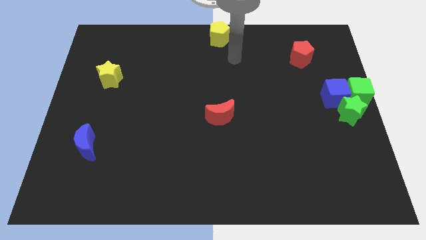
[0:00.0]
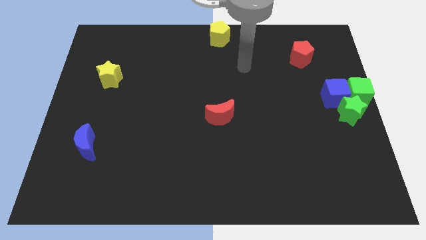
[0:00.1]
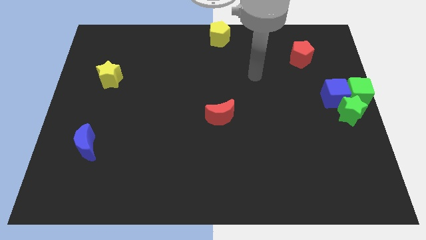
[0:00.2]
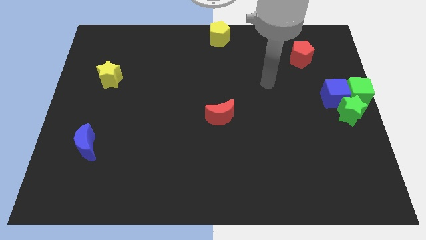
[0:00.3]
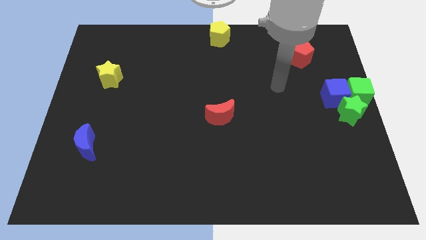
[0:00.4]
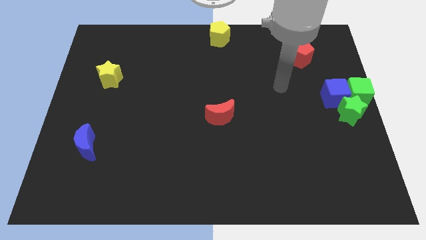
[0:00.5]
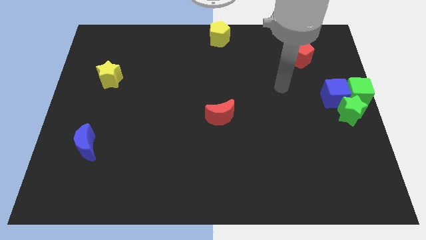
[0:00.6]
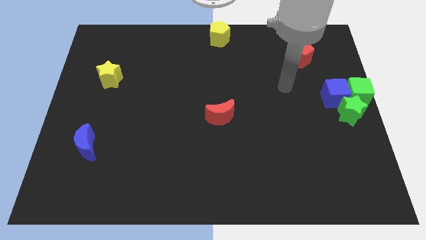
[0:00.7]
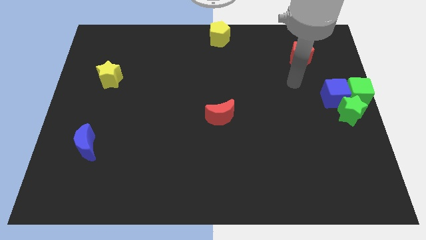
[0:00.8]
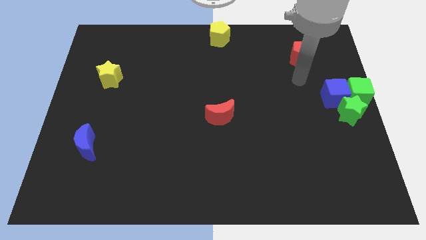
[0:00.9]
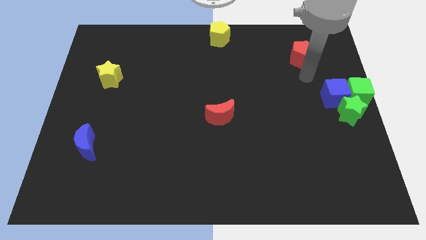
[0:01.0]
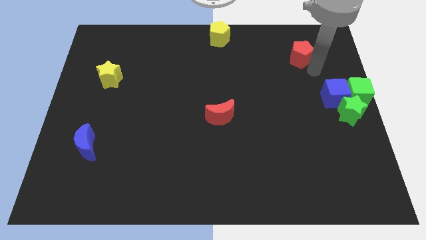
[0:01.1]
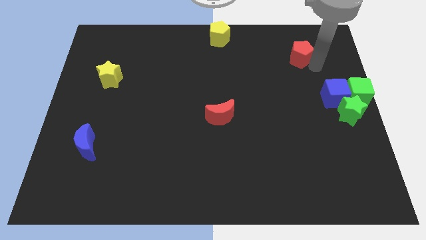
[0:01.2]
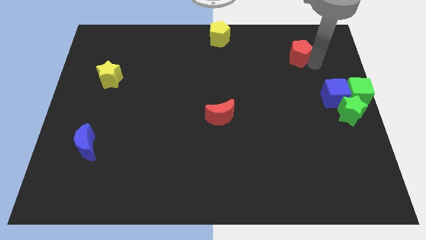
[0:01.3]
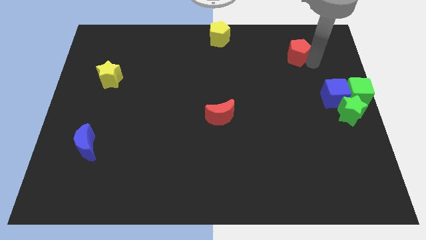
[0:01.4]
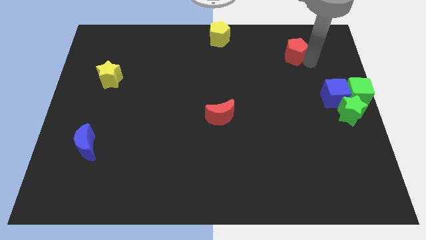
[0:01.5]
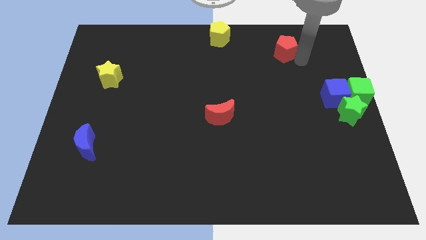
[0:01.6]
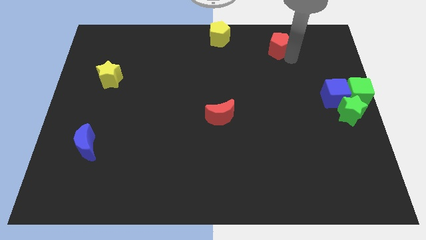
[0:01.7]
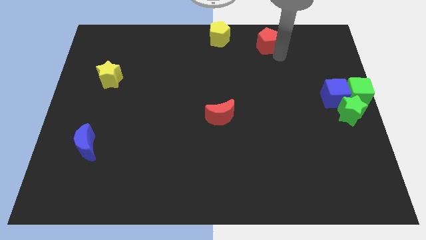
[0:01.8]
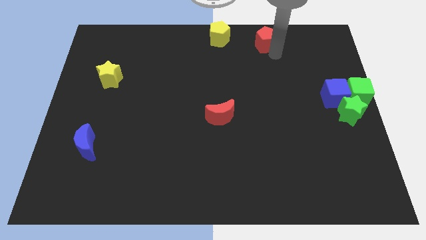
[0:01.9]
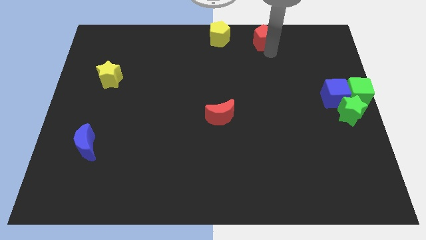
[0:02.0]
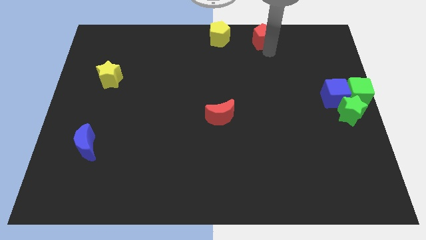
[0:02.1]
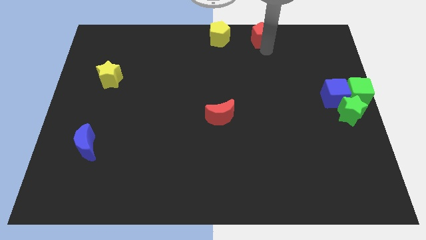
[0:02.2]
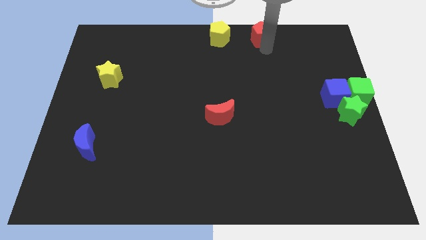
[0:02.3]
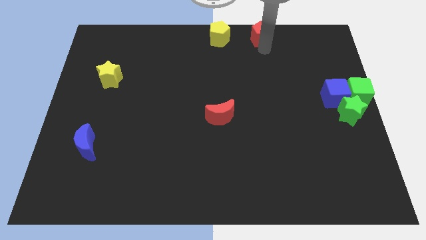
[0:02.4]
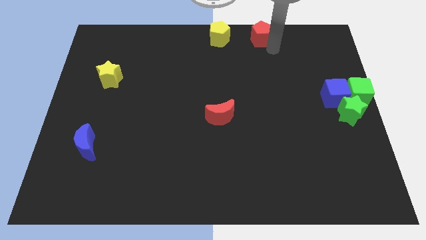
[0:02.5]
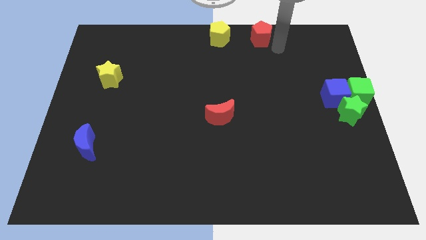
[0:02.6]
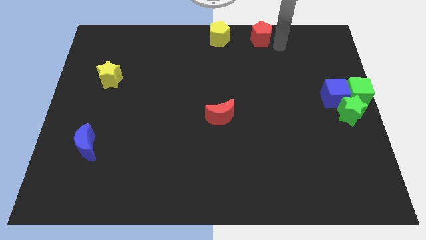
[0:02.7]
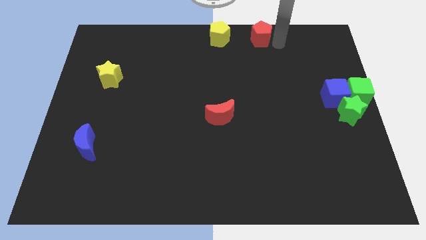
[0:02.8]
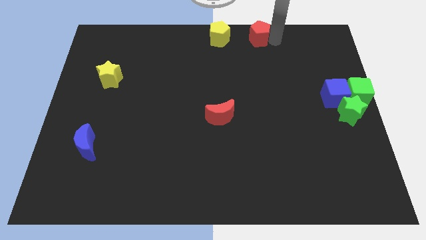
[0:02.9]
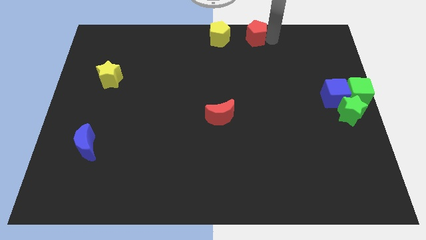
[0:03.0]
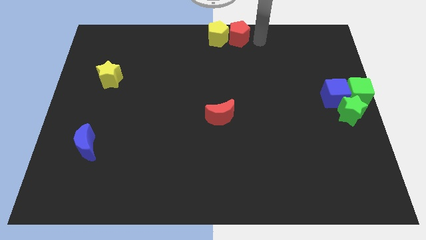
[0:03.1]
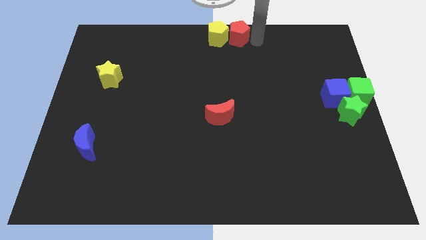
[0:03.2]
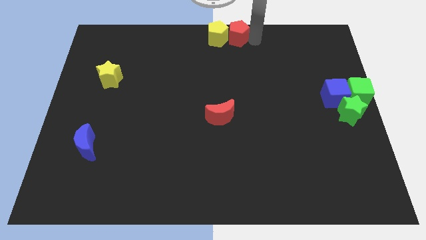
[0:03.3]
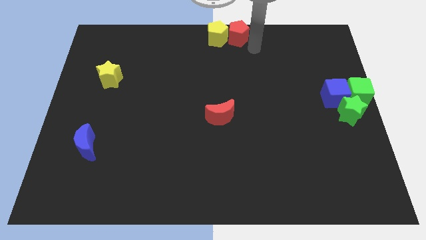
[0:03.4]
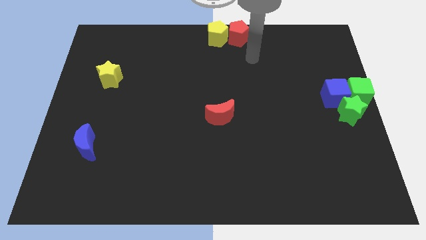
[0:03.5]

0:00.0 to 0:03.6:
push the red pentagon to the right of the yellow pentagon

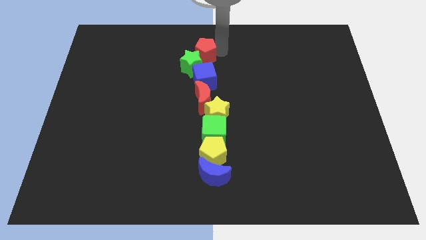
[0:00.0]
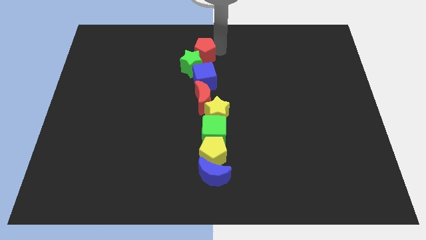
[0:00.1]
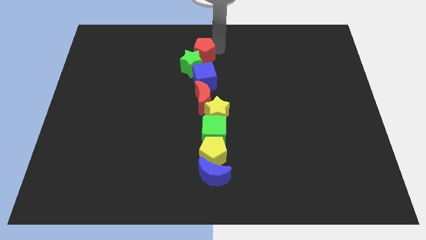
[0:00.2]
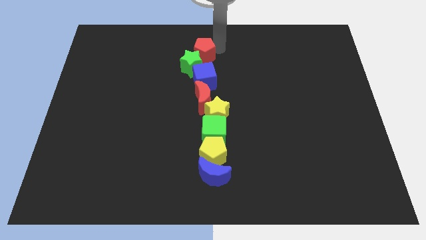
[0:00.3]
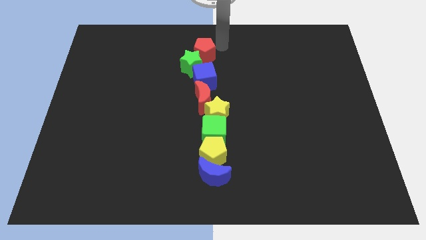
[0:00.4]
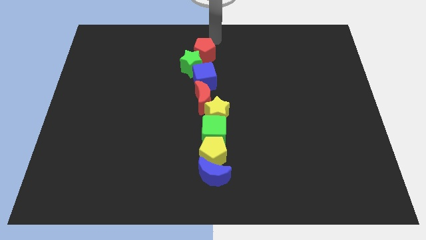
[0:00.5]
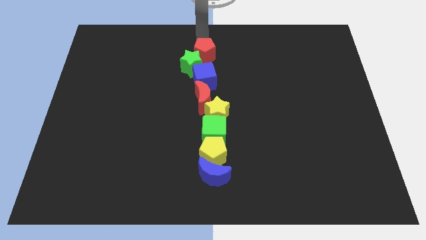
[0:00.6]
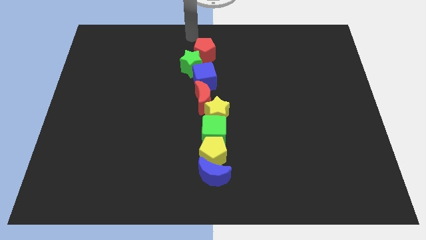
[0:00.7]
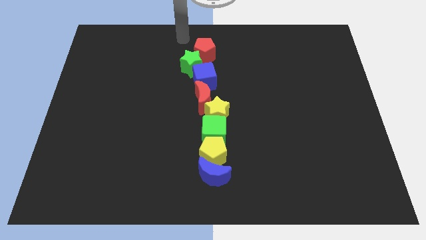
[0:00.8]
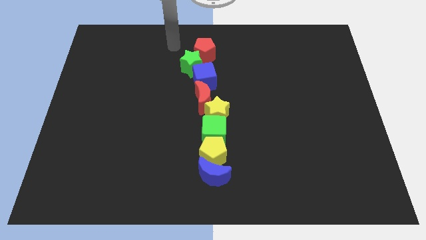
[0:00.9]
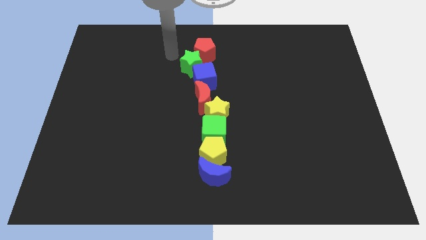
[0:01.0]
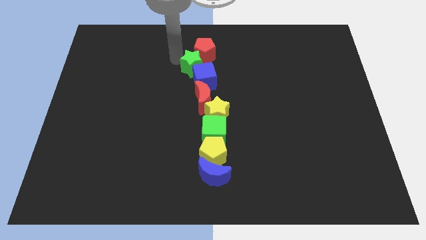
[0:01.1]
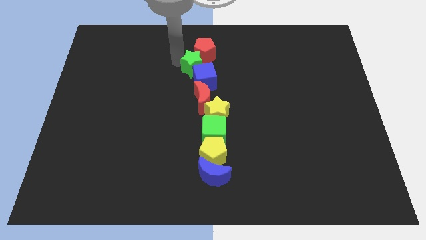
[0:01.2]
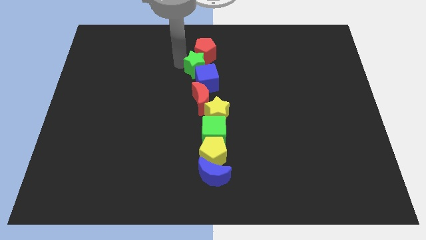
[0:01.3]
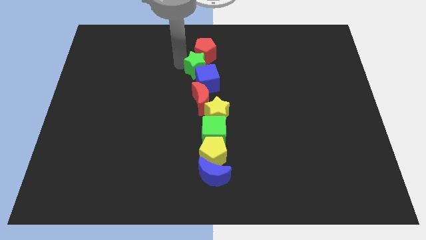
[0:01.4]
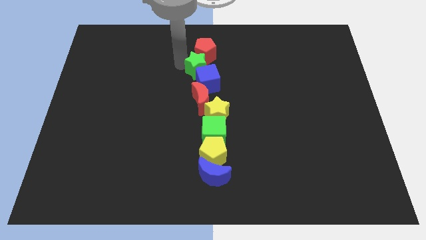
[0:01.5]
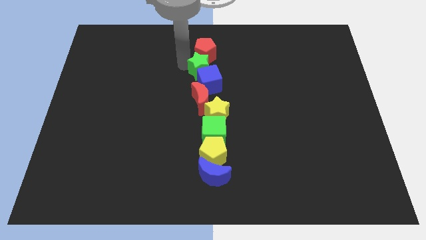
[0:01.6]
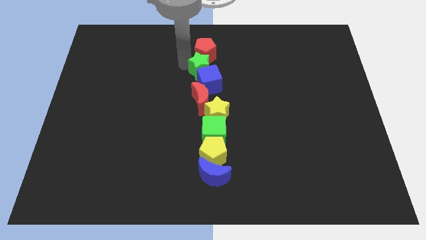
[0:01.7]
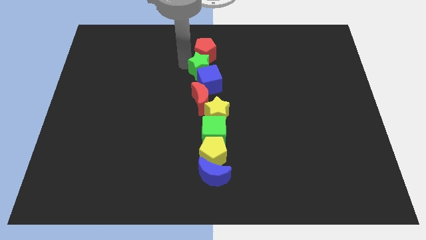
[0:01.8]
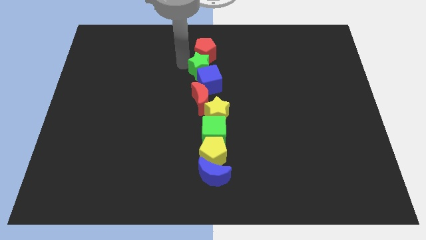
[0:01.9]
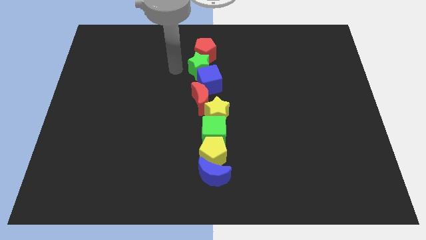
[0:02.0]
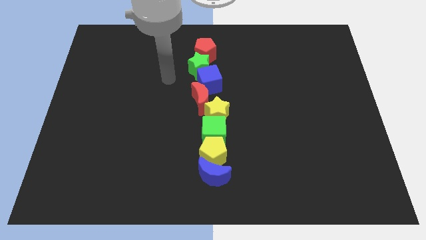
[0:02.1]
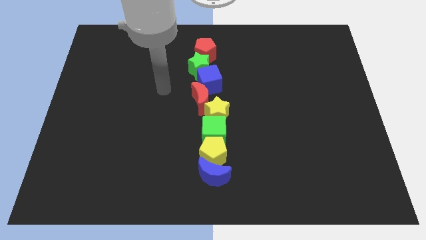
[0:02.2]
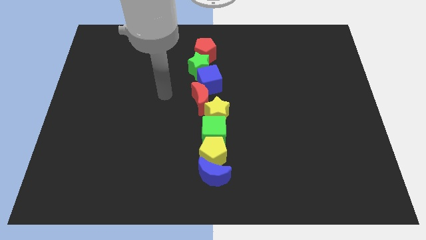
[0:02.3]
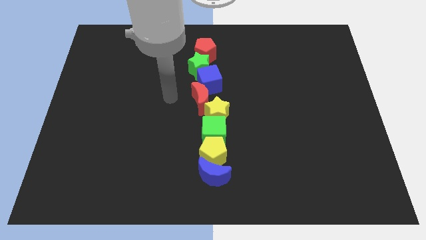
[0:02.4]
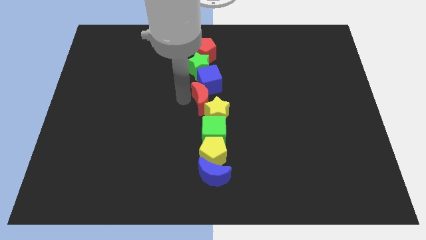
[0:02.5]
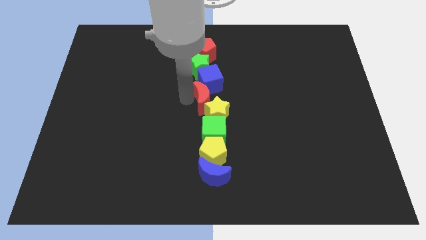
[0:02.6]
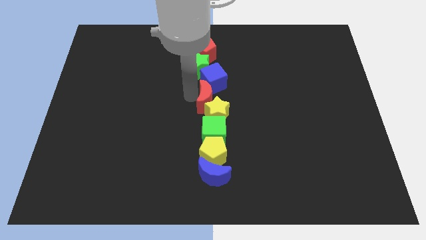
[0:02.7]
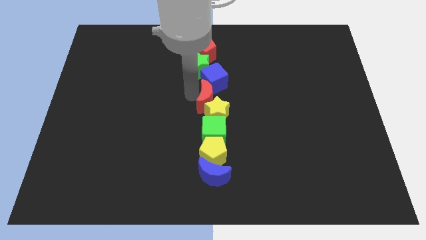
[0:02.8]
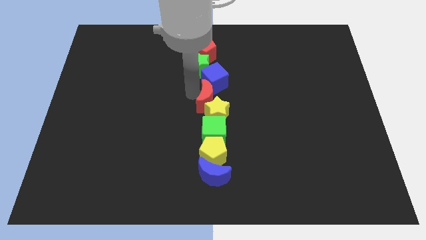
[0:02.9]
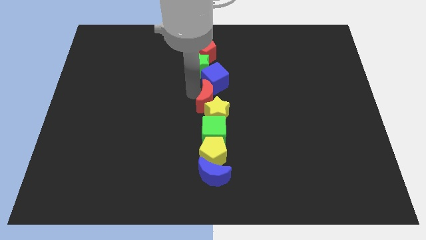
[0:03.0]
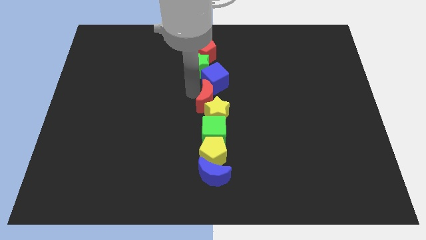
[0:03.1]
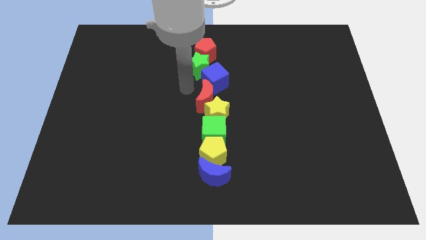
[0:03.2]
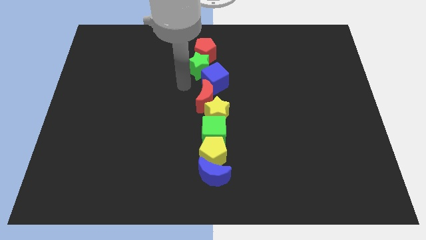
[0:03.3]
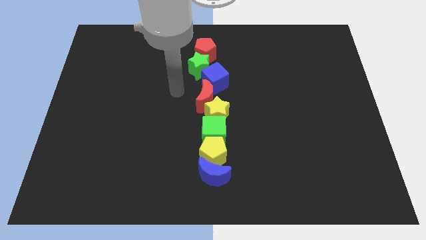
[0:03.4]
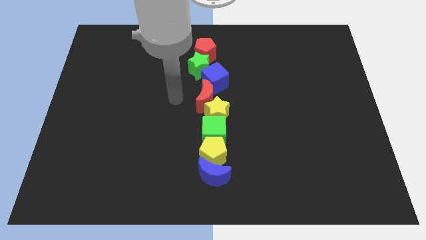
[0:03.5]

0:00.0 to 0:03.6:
slightly push the green star towards the right

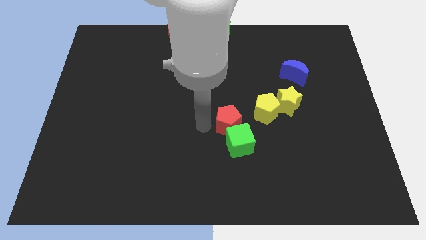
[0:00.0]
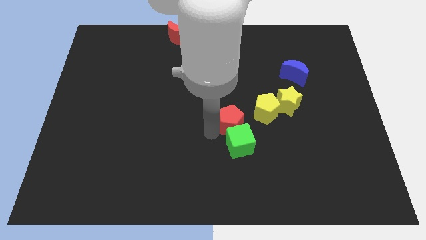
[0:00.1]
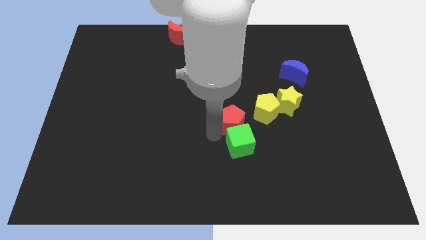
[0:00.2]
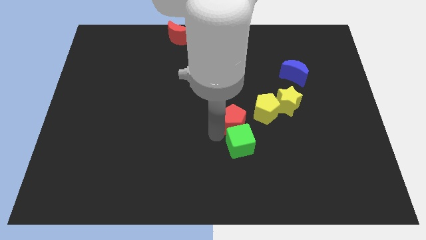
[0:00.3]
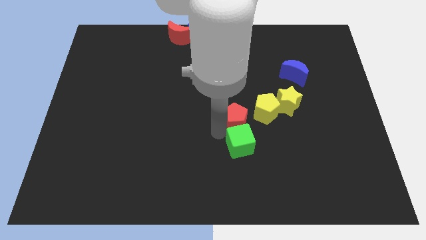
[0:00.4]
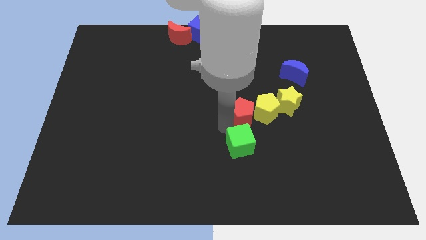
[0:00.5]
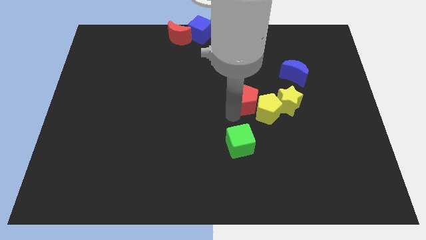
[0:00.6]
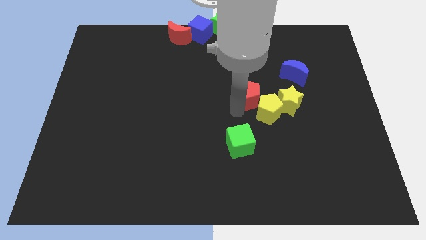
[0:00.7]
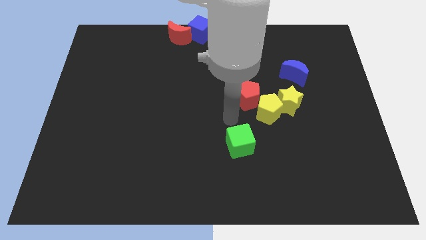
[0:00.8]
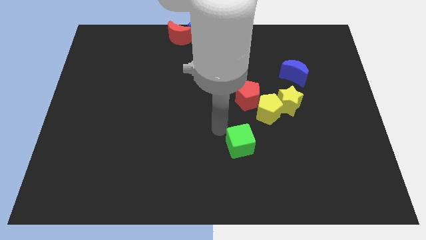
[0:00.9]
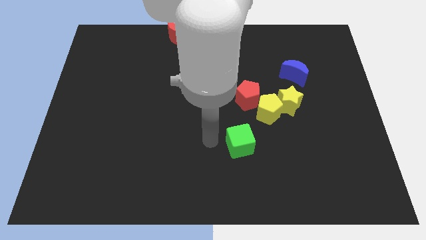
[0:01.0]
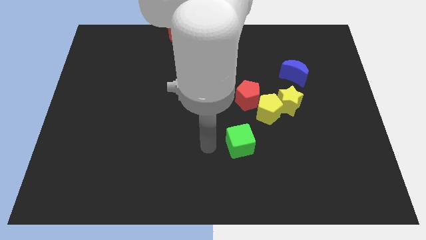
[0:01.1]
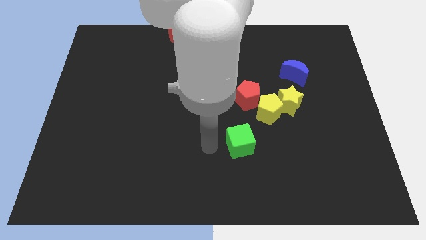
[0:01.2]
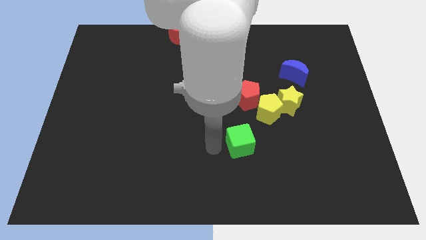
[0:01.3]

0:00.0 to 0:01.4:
place the red pentagon vertically above the green cube

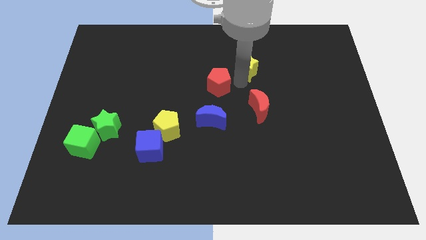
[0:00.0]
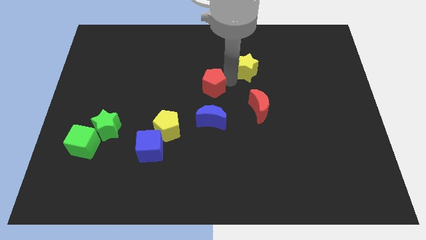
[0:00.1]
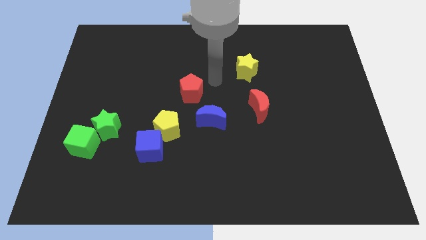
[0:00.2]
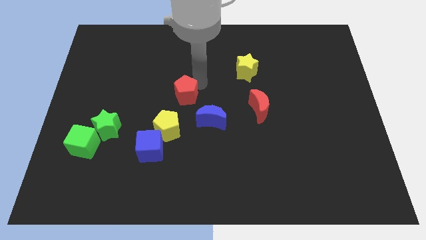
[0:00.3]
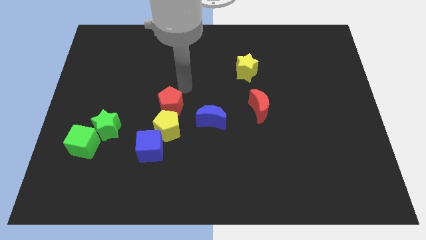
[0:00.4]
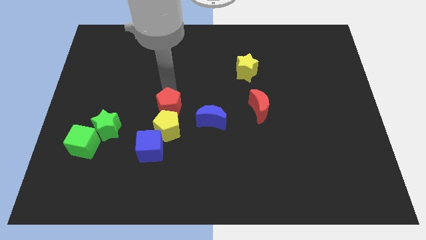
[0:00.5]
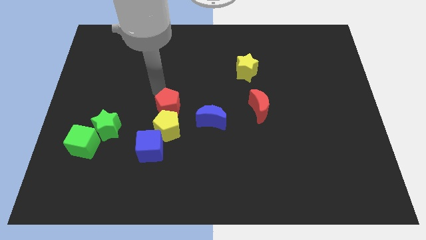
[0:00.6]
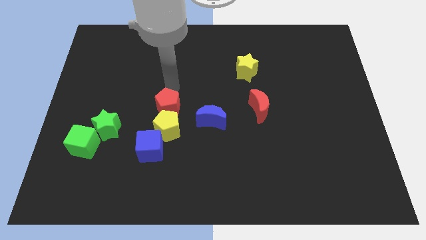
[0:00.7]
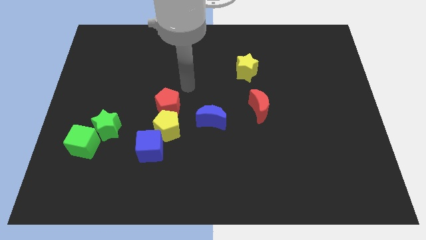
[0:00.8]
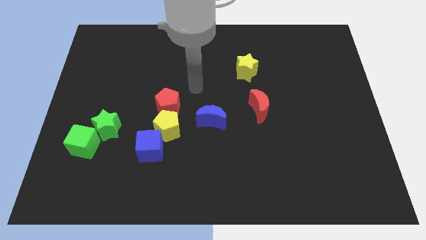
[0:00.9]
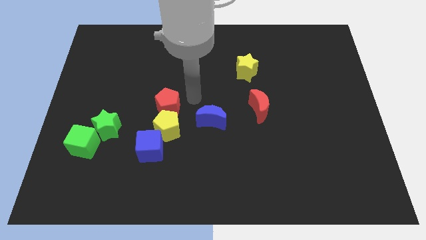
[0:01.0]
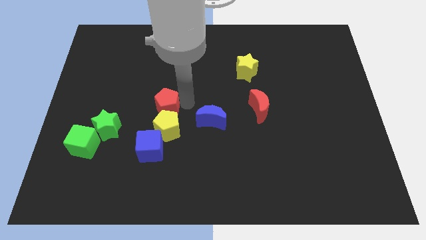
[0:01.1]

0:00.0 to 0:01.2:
move the red pentagon on the top of yellow pentagon
